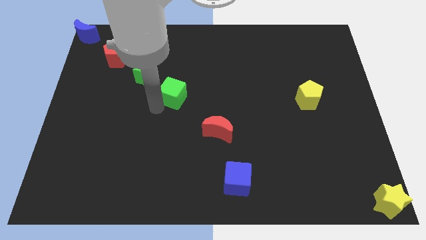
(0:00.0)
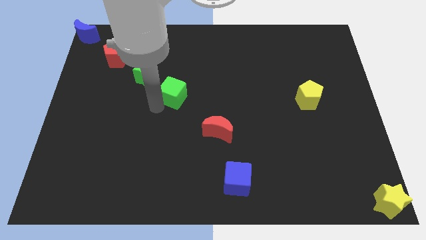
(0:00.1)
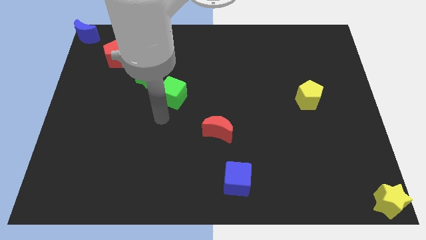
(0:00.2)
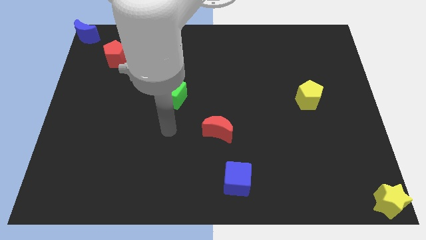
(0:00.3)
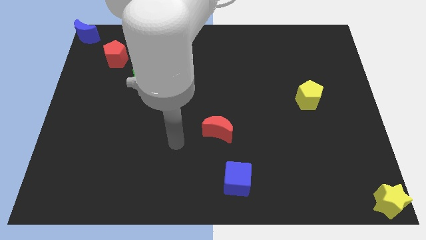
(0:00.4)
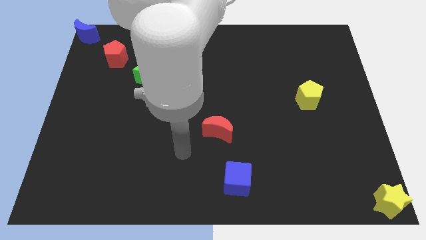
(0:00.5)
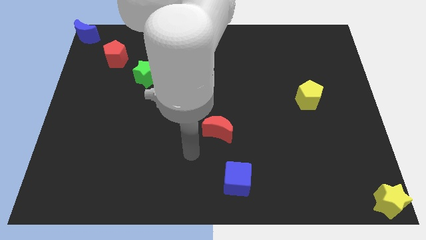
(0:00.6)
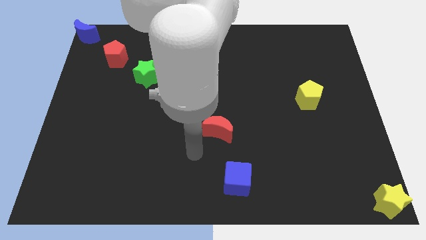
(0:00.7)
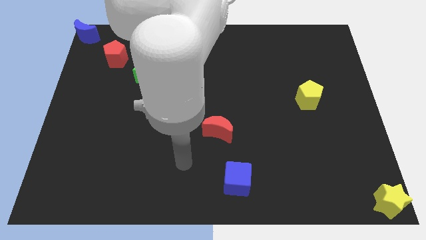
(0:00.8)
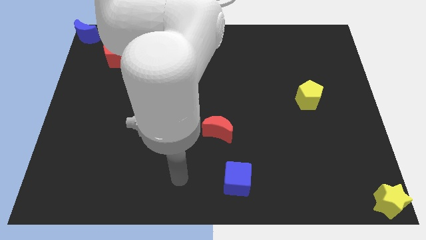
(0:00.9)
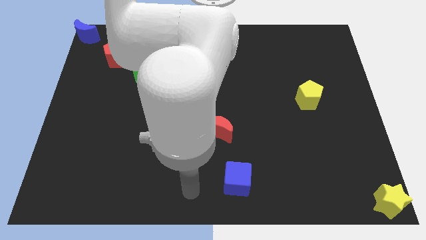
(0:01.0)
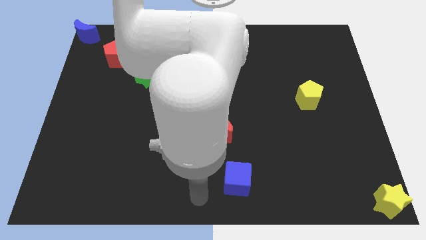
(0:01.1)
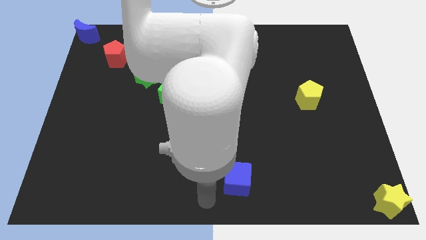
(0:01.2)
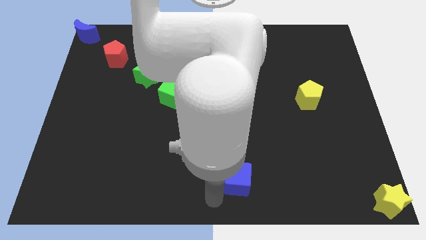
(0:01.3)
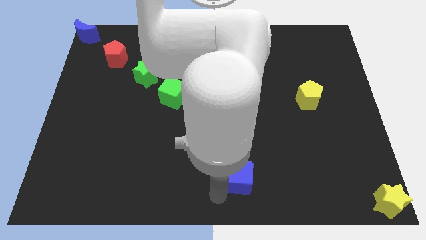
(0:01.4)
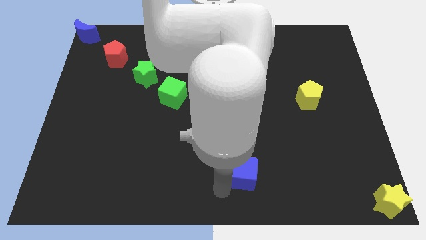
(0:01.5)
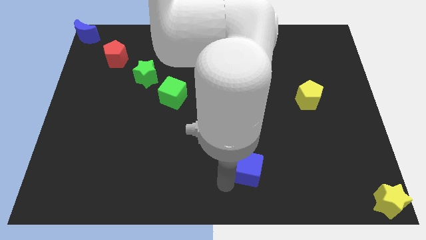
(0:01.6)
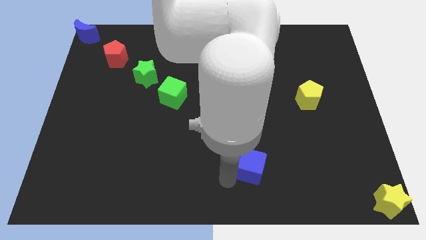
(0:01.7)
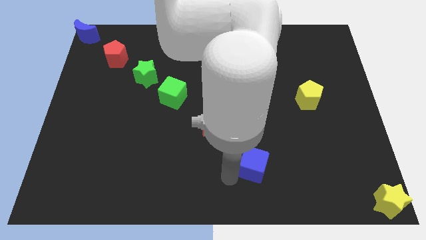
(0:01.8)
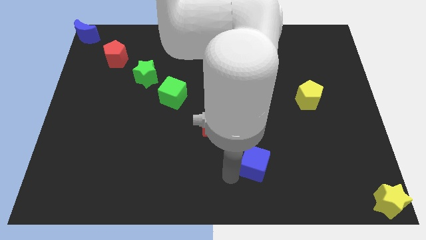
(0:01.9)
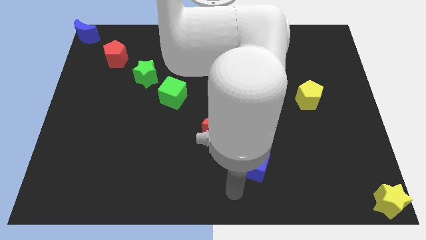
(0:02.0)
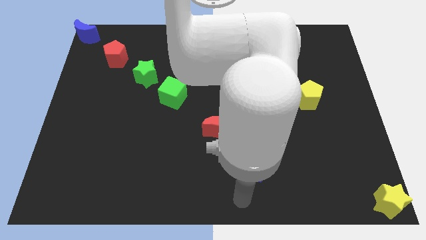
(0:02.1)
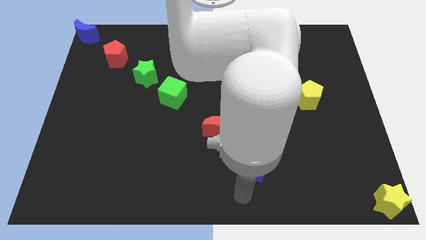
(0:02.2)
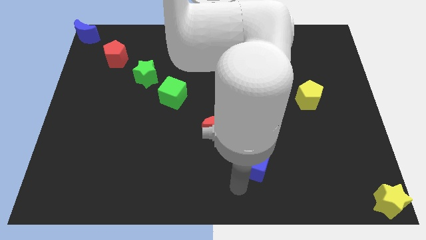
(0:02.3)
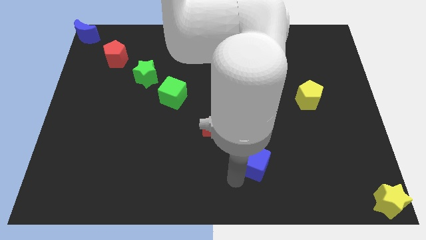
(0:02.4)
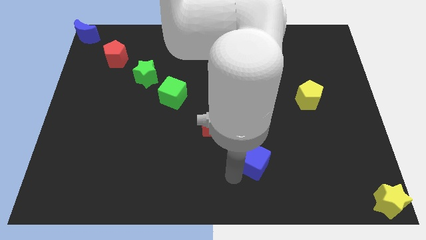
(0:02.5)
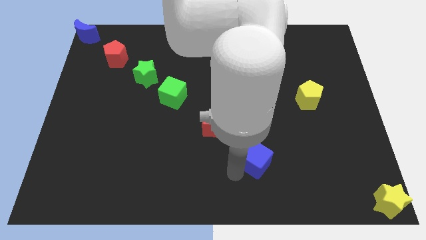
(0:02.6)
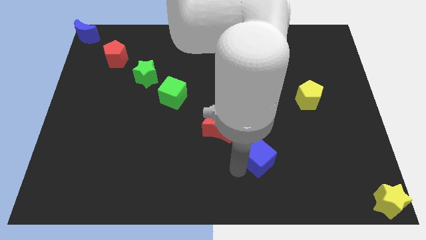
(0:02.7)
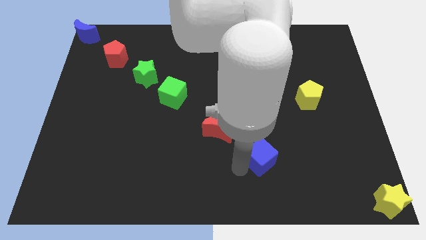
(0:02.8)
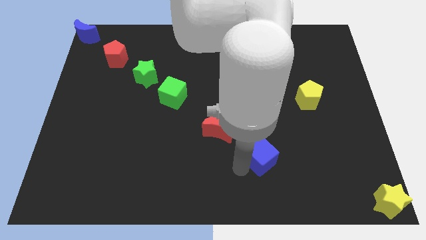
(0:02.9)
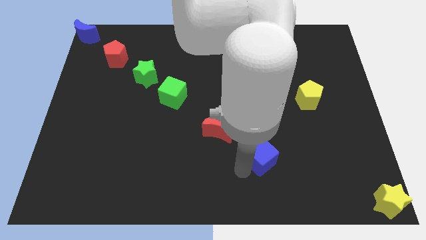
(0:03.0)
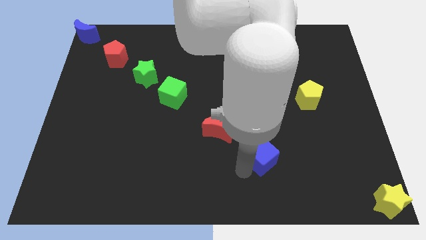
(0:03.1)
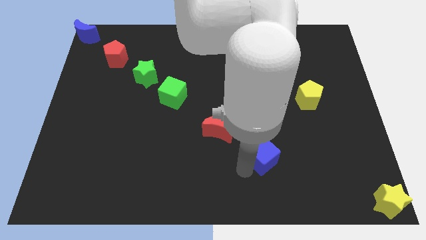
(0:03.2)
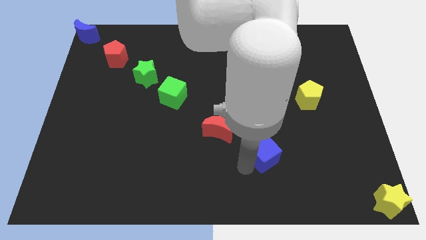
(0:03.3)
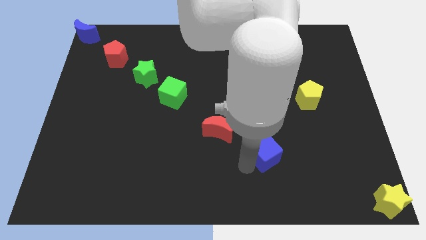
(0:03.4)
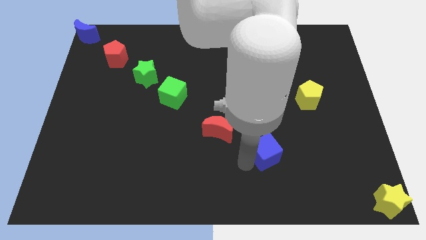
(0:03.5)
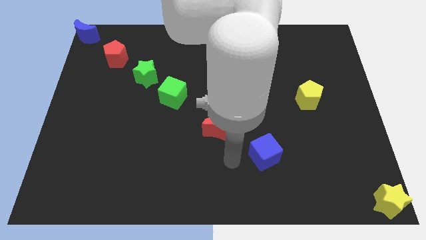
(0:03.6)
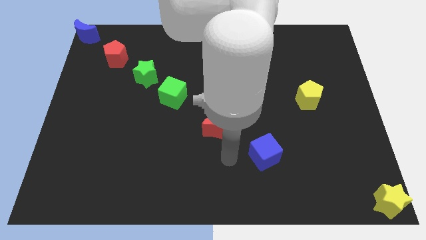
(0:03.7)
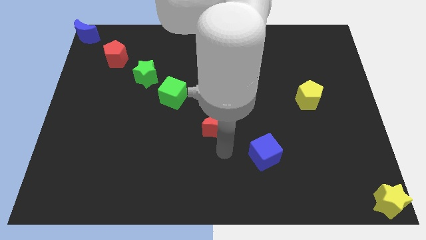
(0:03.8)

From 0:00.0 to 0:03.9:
push the blue cube upward

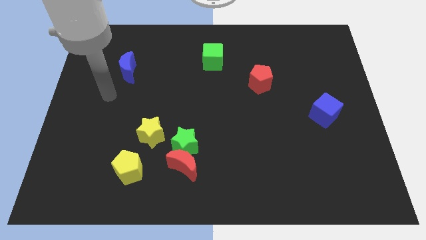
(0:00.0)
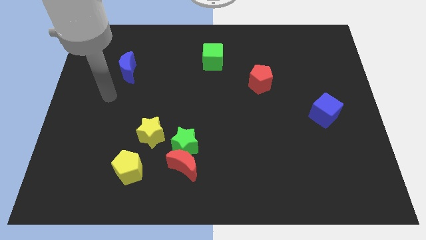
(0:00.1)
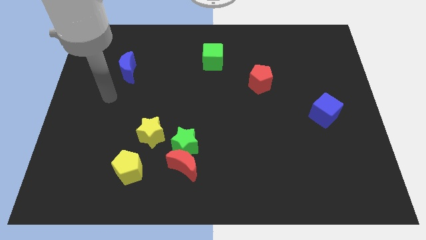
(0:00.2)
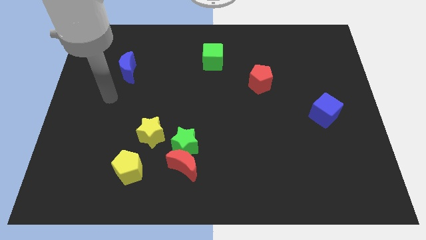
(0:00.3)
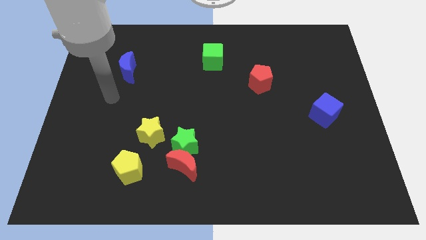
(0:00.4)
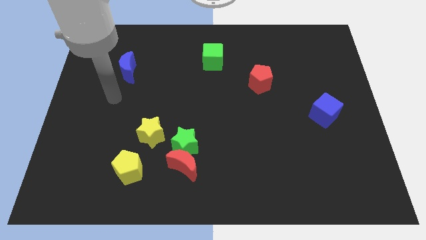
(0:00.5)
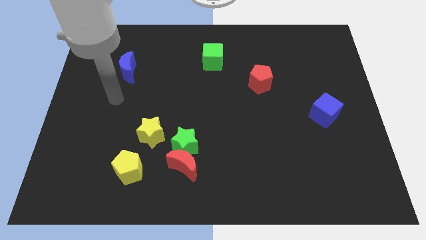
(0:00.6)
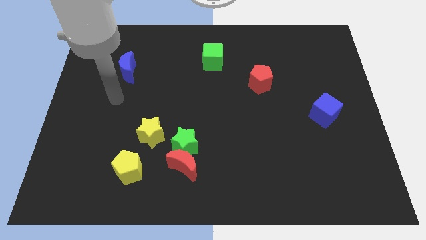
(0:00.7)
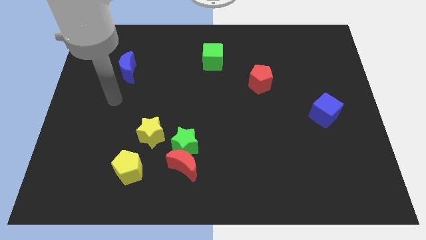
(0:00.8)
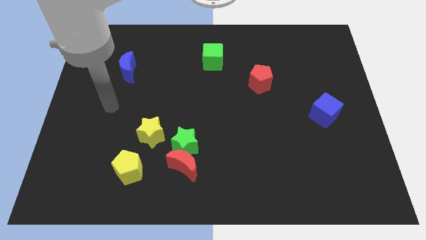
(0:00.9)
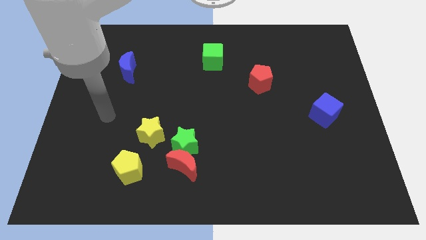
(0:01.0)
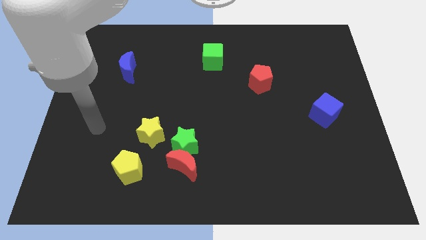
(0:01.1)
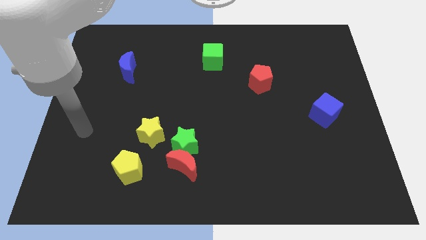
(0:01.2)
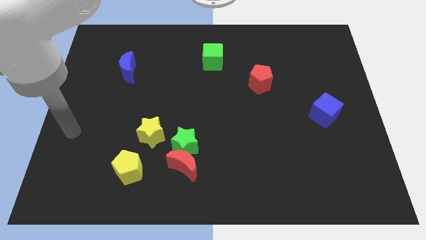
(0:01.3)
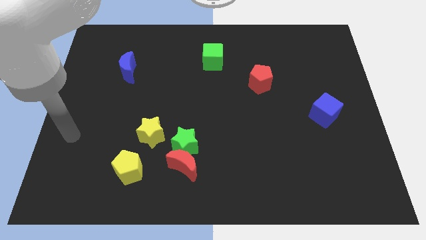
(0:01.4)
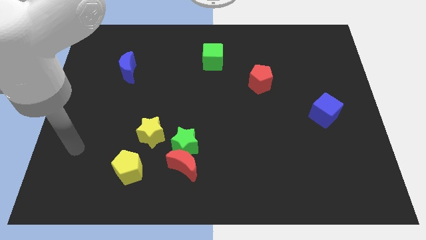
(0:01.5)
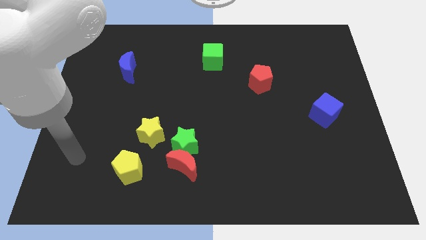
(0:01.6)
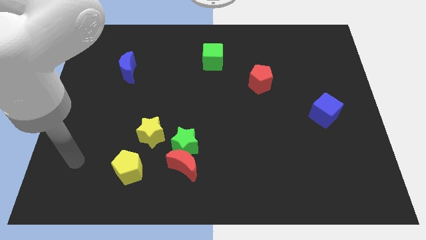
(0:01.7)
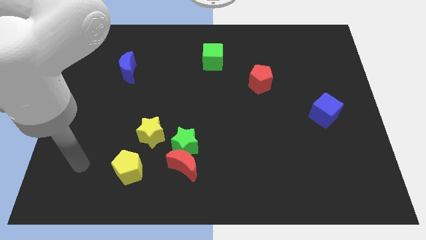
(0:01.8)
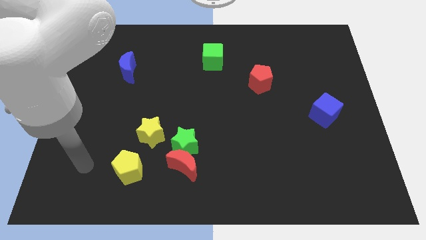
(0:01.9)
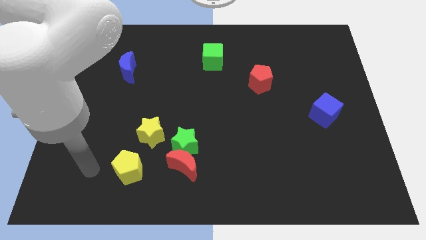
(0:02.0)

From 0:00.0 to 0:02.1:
slide your arm to the left of yellow pentagon

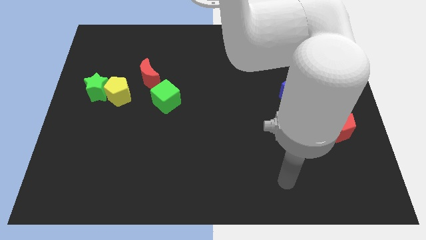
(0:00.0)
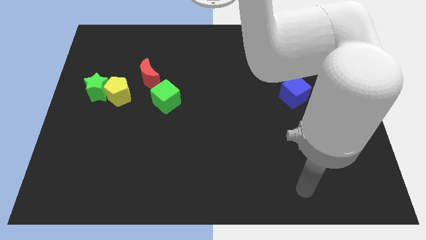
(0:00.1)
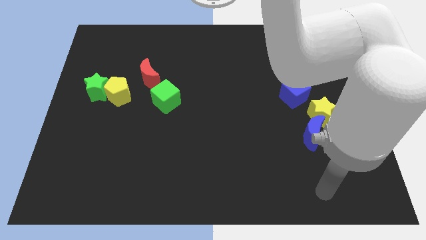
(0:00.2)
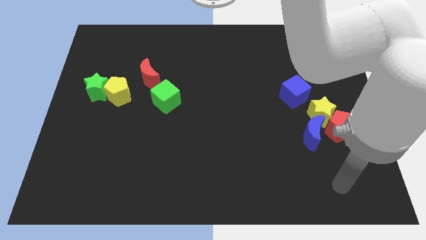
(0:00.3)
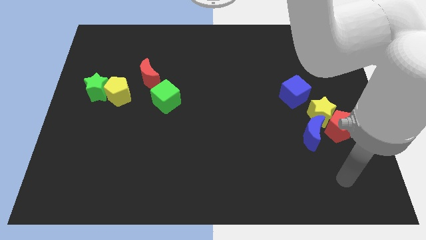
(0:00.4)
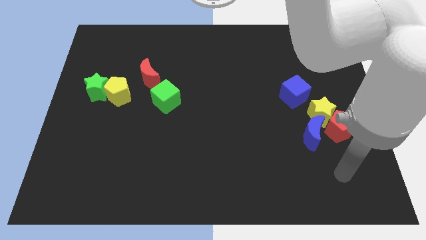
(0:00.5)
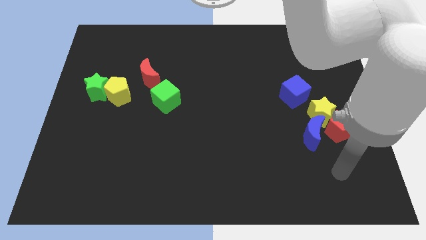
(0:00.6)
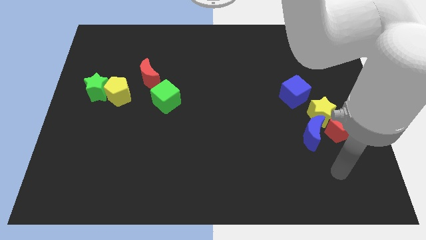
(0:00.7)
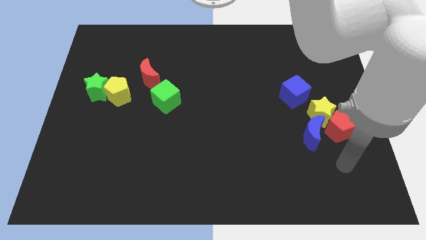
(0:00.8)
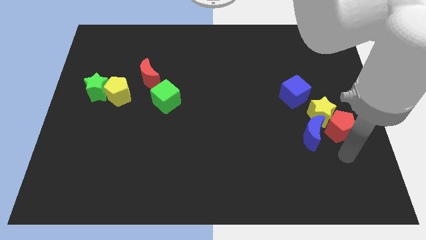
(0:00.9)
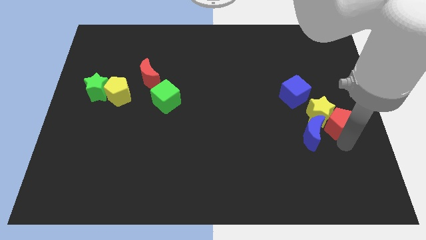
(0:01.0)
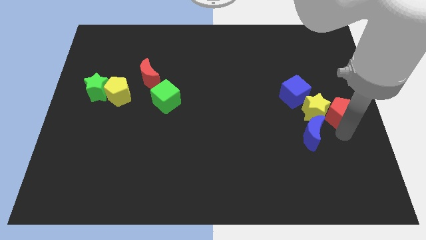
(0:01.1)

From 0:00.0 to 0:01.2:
touch the bottom side of the red pentagon

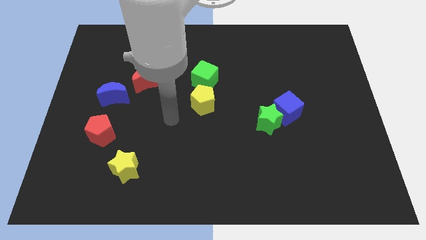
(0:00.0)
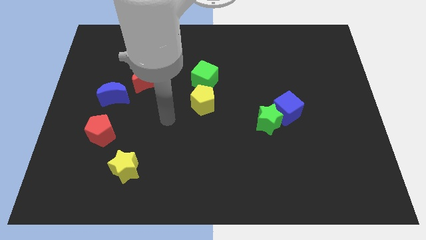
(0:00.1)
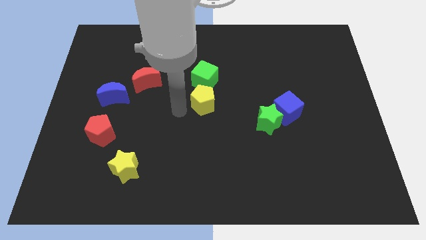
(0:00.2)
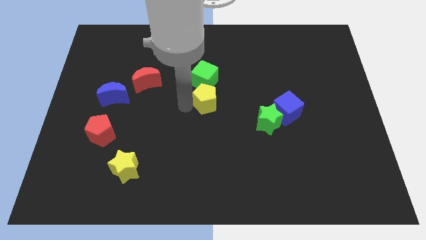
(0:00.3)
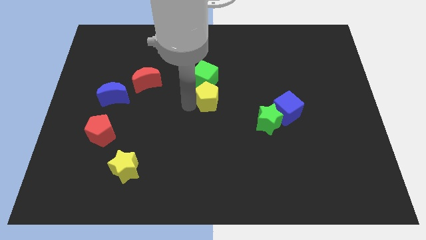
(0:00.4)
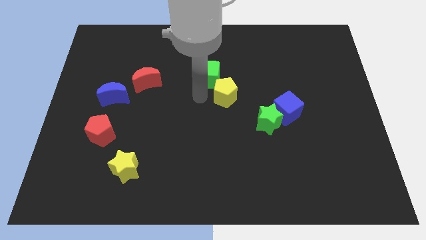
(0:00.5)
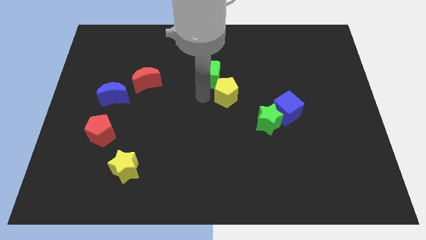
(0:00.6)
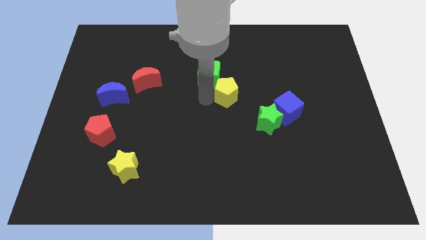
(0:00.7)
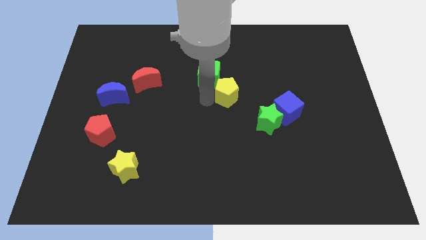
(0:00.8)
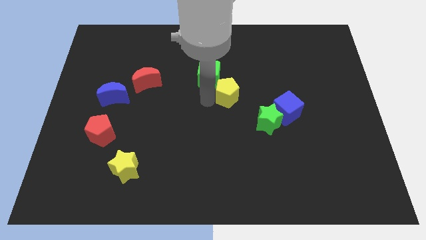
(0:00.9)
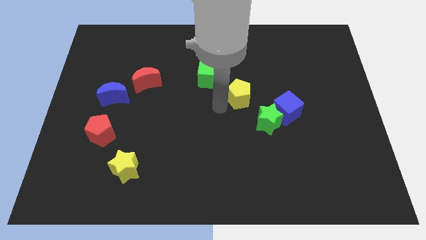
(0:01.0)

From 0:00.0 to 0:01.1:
separate the yellow pentagon from the green cube

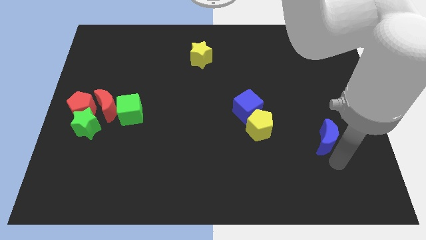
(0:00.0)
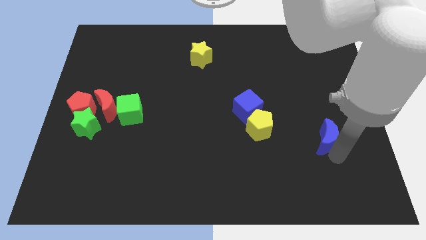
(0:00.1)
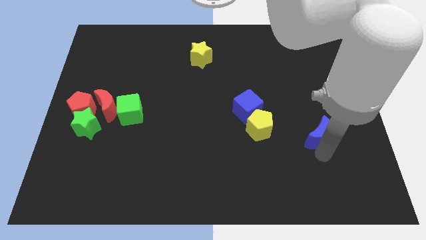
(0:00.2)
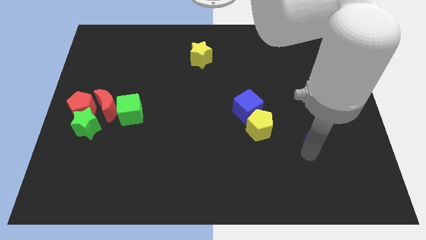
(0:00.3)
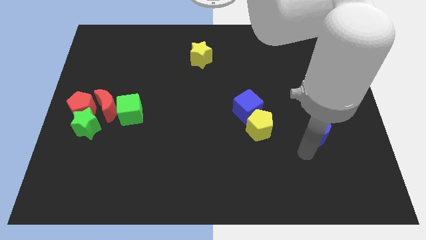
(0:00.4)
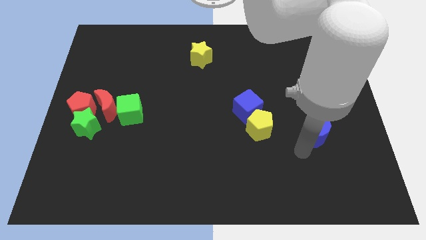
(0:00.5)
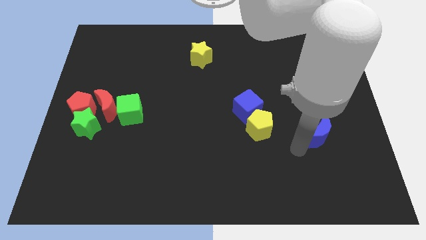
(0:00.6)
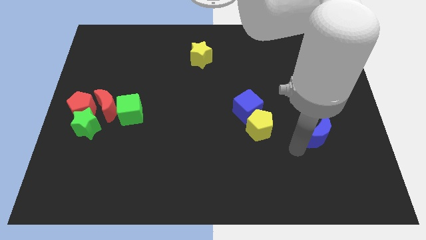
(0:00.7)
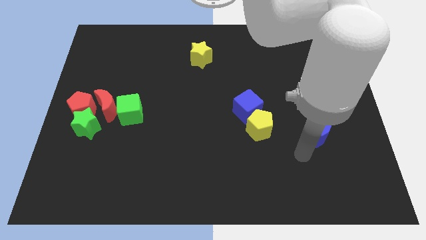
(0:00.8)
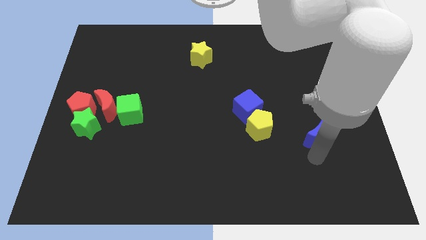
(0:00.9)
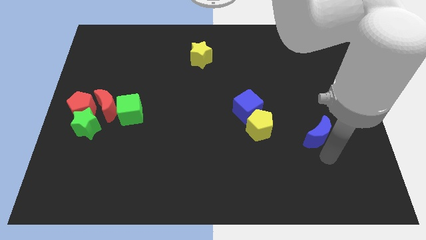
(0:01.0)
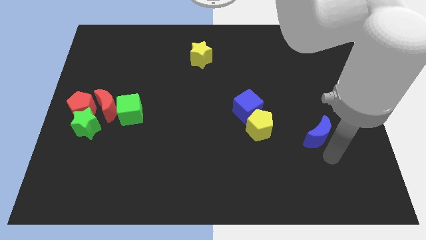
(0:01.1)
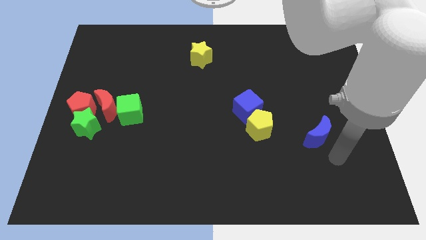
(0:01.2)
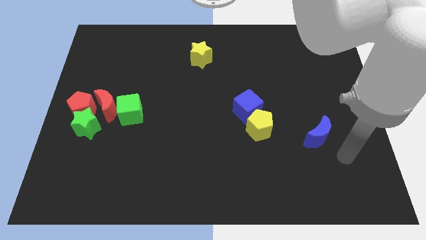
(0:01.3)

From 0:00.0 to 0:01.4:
move the blue moon slightly up
